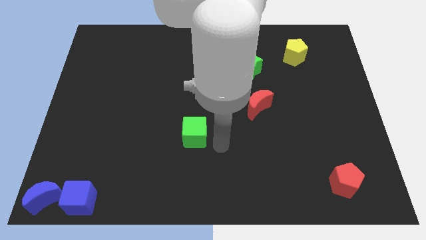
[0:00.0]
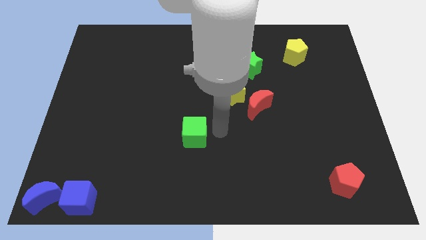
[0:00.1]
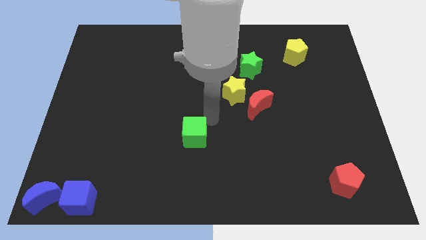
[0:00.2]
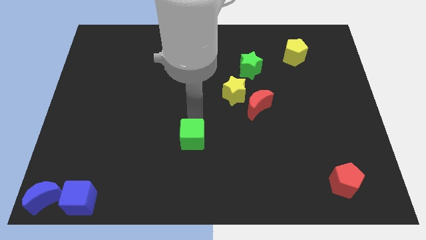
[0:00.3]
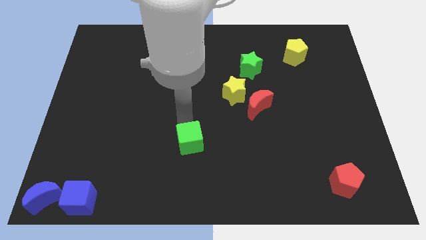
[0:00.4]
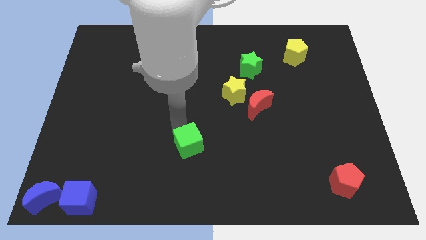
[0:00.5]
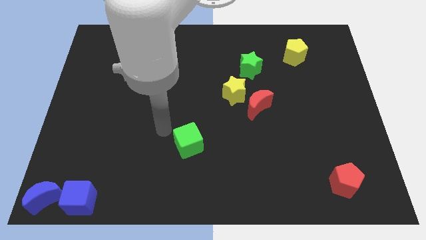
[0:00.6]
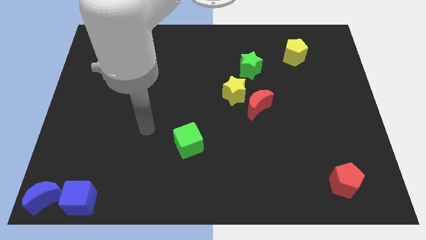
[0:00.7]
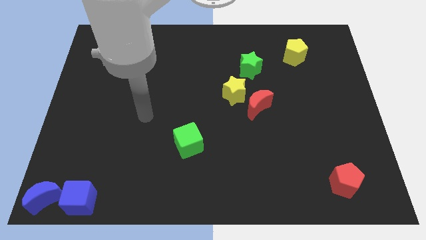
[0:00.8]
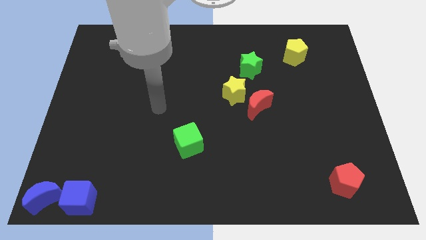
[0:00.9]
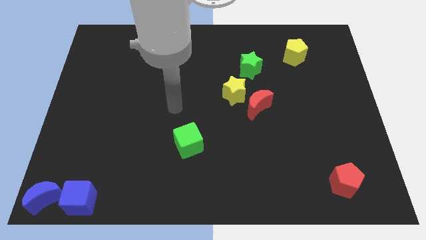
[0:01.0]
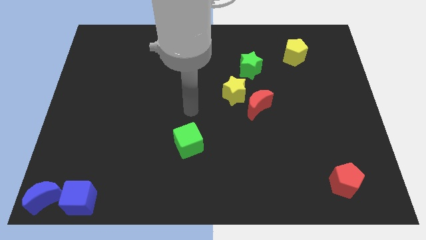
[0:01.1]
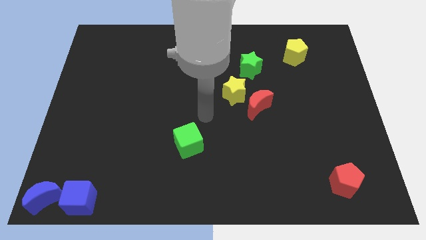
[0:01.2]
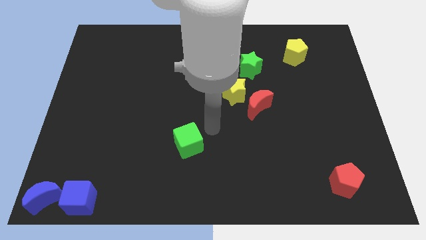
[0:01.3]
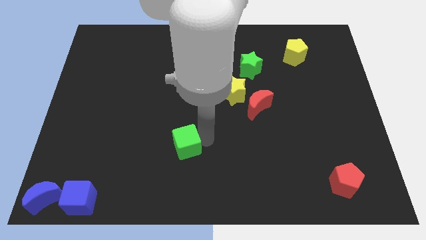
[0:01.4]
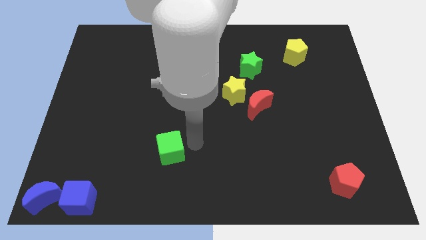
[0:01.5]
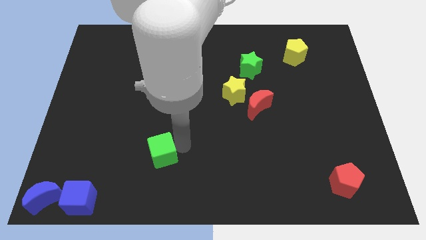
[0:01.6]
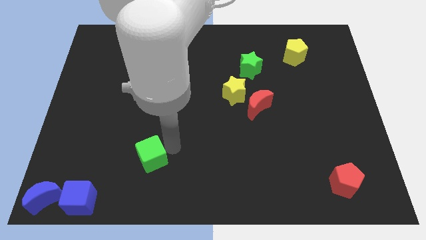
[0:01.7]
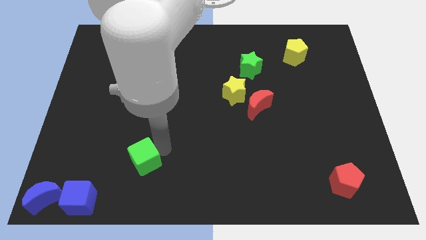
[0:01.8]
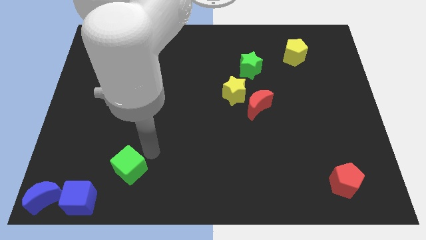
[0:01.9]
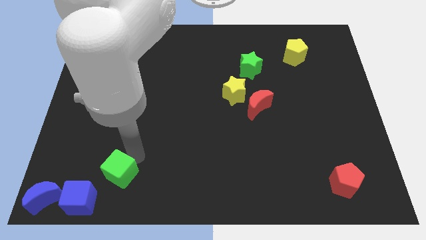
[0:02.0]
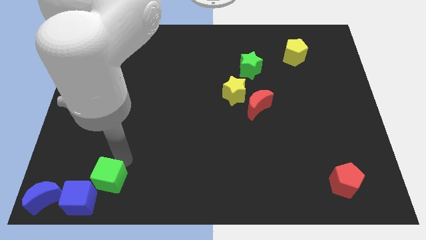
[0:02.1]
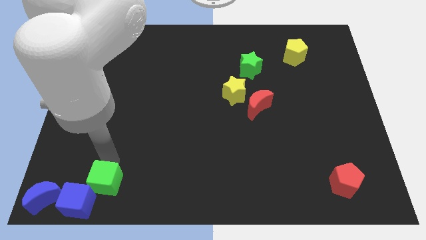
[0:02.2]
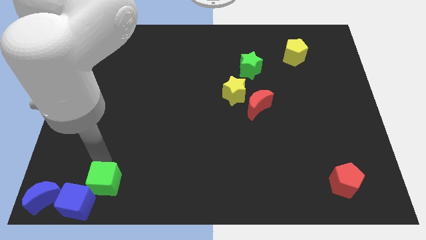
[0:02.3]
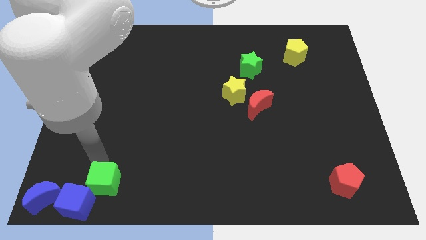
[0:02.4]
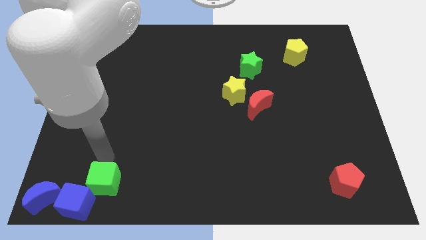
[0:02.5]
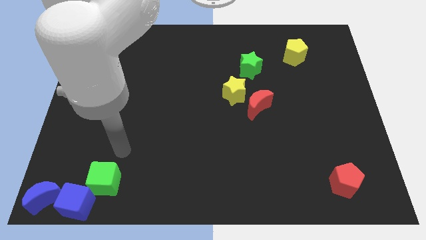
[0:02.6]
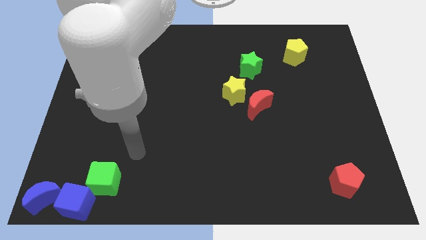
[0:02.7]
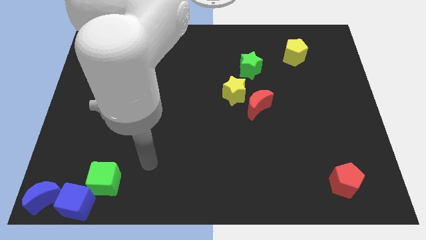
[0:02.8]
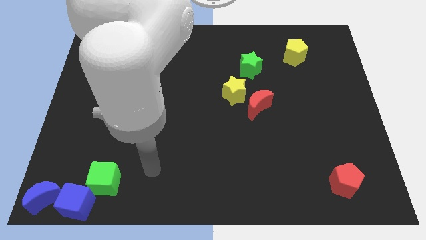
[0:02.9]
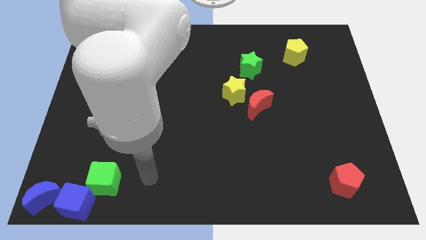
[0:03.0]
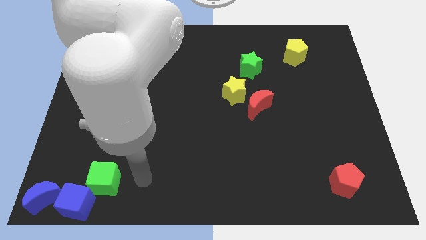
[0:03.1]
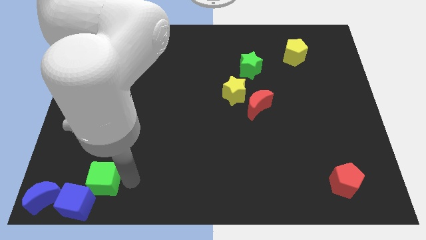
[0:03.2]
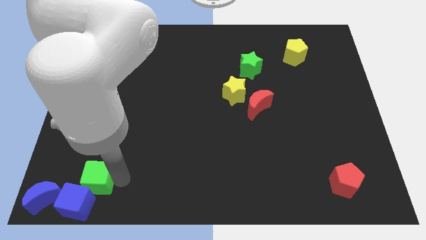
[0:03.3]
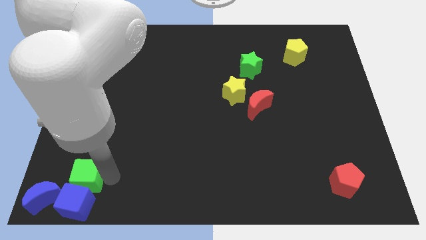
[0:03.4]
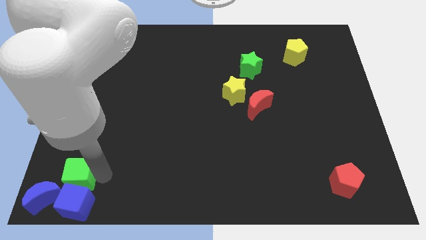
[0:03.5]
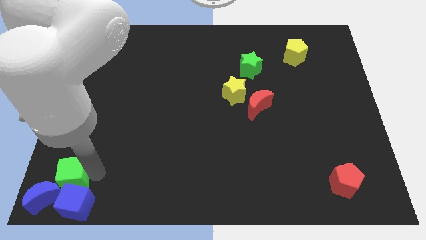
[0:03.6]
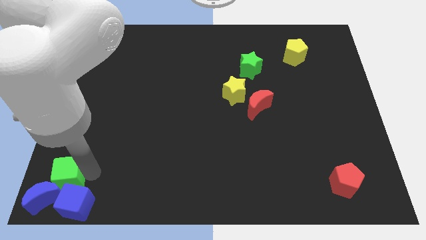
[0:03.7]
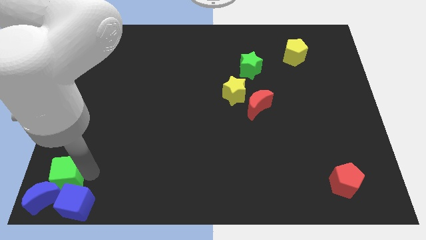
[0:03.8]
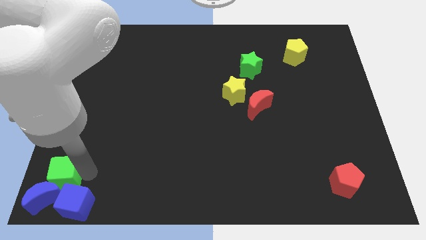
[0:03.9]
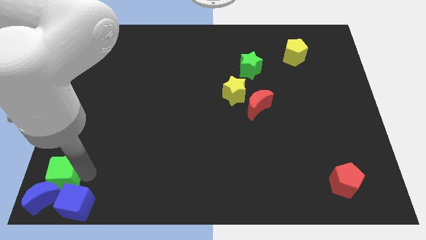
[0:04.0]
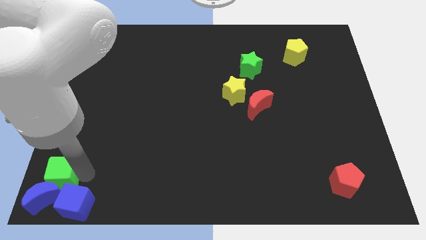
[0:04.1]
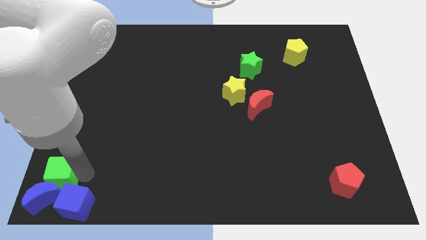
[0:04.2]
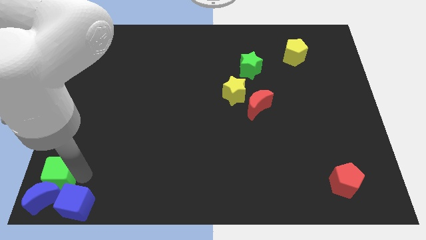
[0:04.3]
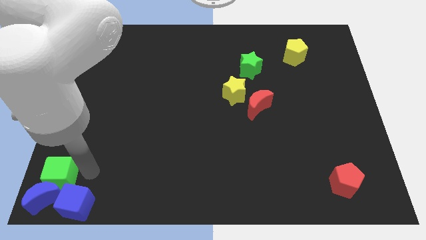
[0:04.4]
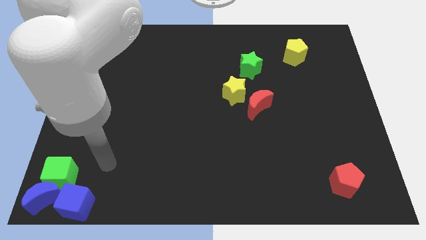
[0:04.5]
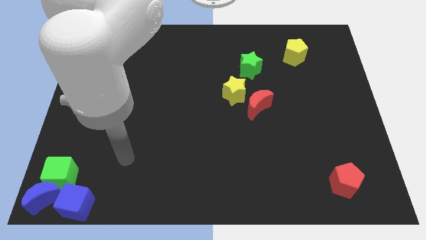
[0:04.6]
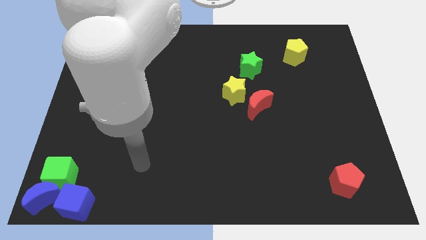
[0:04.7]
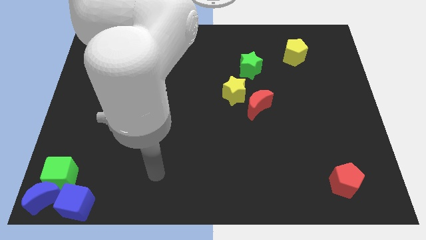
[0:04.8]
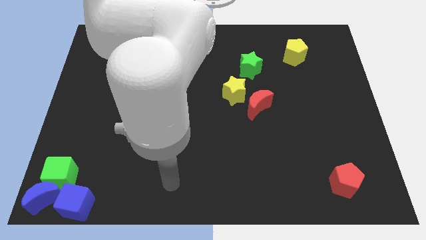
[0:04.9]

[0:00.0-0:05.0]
place the green cube above the blue crescent

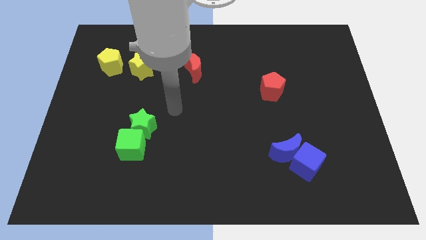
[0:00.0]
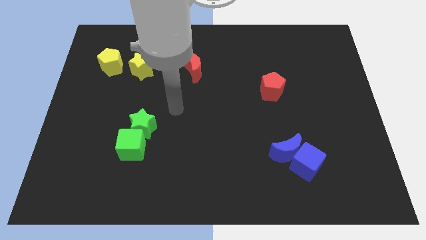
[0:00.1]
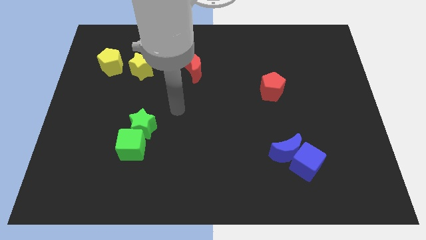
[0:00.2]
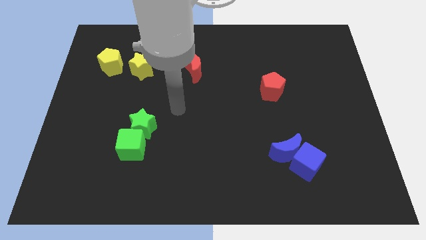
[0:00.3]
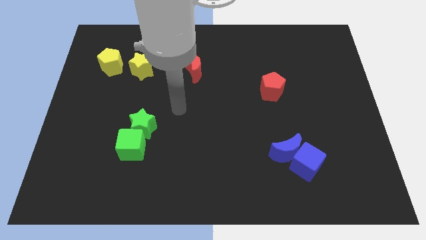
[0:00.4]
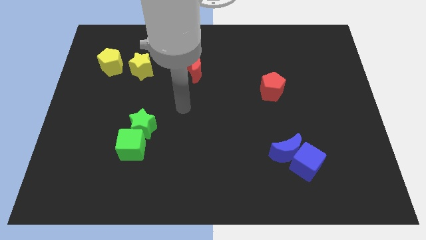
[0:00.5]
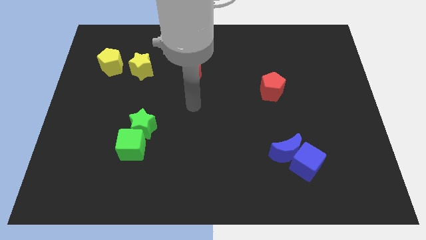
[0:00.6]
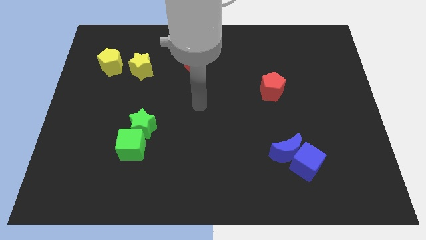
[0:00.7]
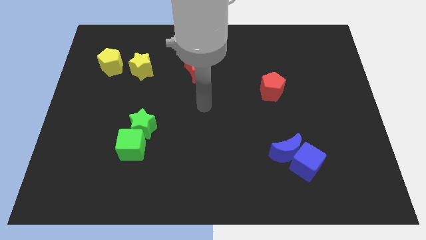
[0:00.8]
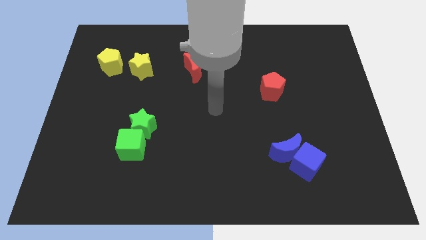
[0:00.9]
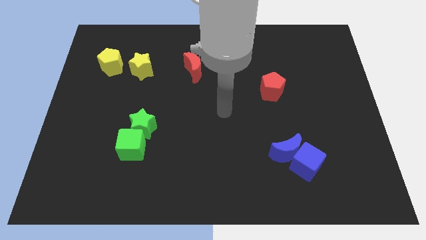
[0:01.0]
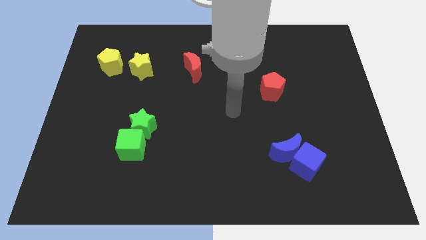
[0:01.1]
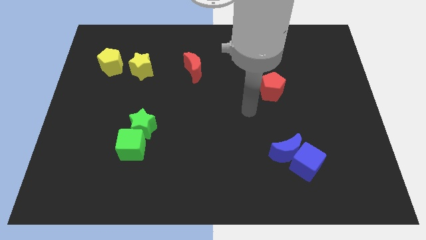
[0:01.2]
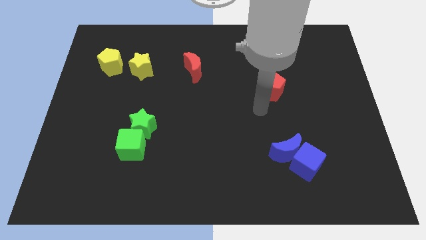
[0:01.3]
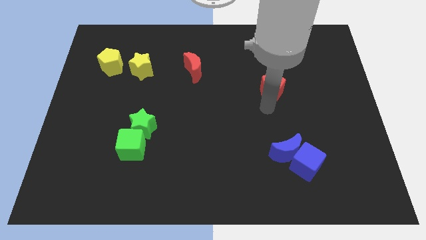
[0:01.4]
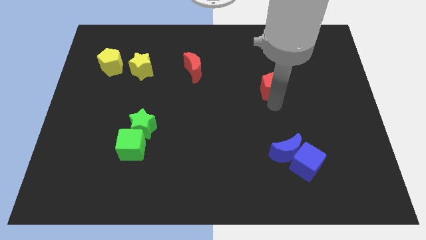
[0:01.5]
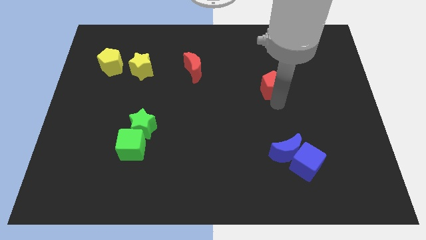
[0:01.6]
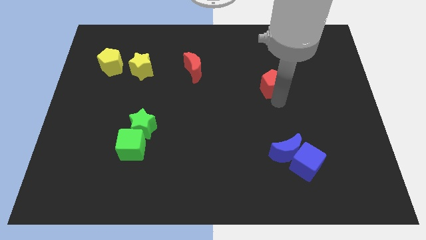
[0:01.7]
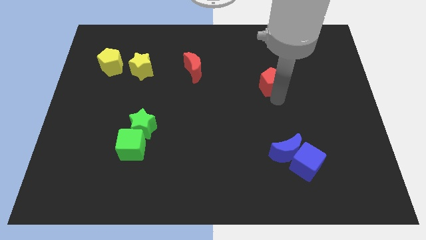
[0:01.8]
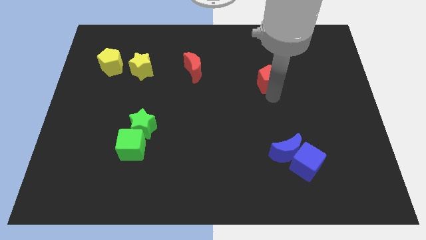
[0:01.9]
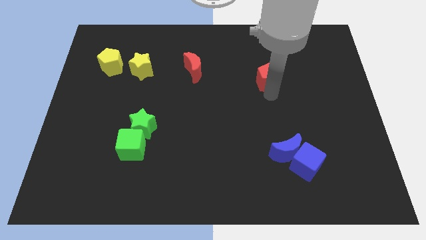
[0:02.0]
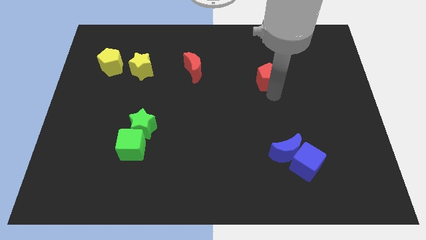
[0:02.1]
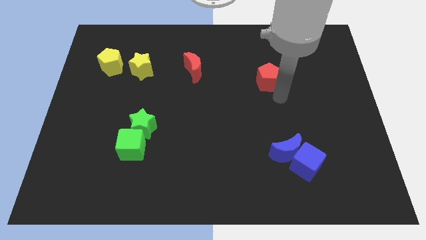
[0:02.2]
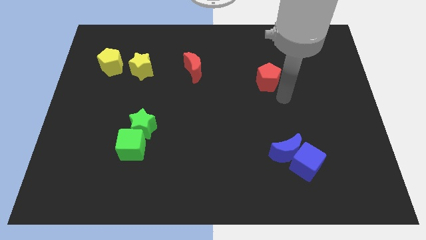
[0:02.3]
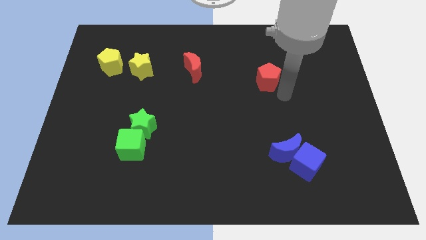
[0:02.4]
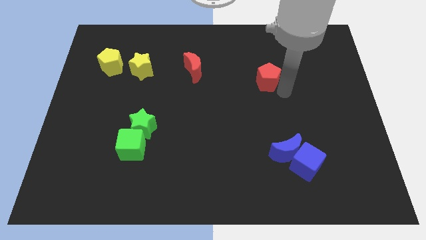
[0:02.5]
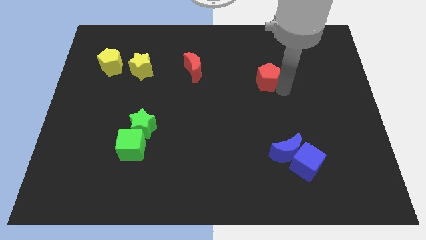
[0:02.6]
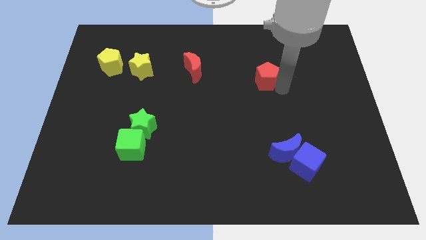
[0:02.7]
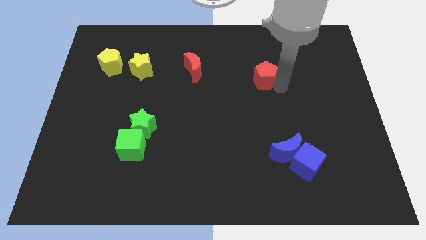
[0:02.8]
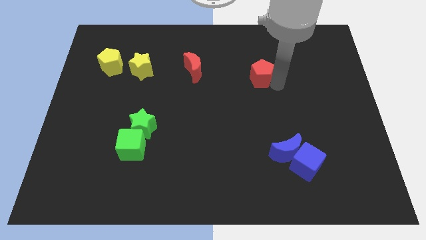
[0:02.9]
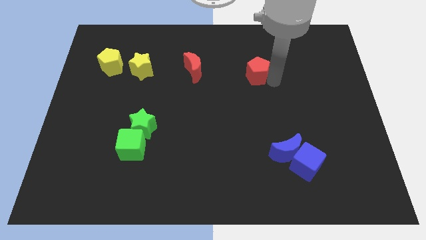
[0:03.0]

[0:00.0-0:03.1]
place the red pentagon right to the red crescent to form a horizontal line

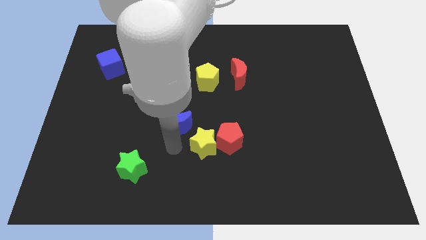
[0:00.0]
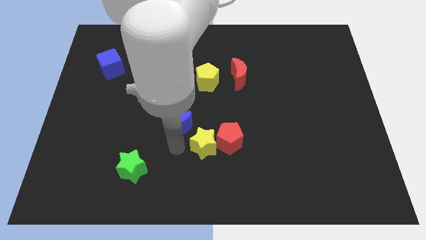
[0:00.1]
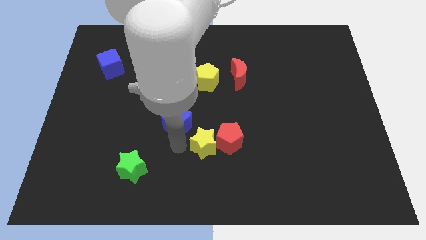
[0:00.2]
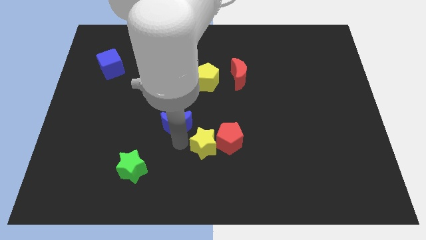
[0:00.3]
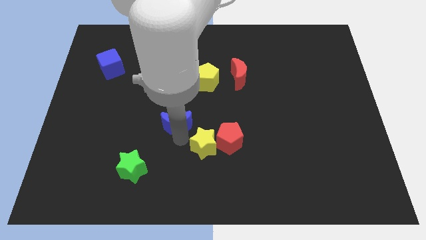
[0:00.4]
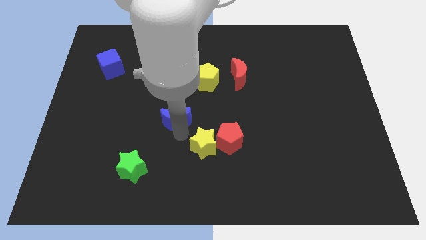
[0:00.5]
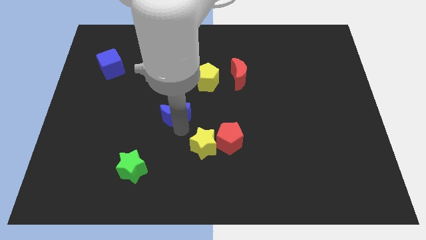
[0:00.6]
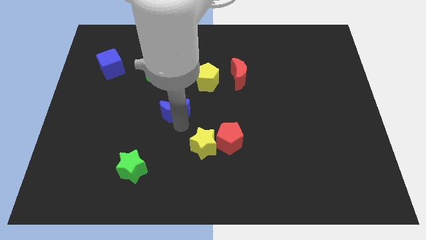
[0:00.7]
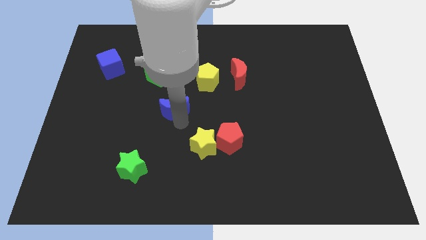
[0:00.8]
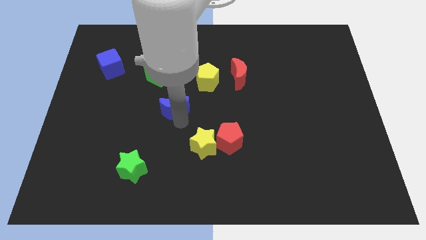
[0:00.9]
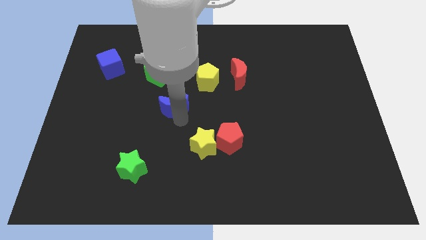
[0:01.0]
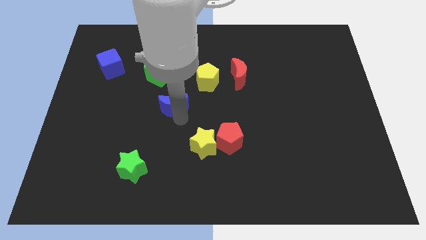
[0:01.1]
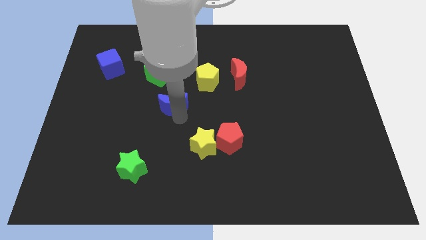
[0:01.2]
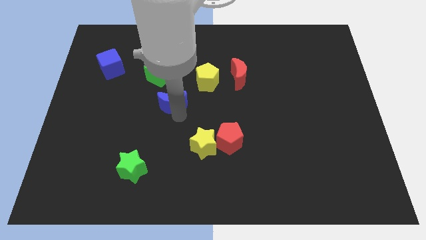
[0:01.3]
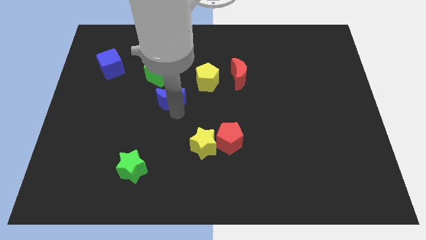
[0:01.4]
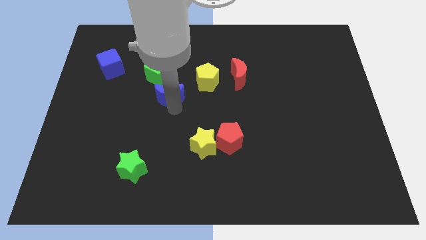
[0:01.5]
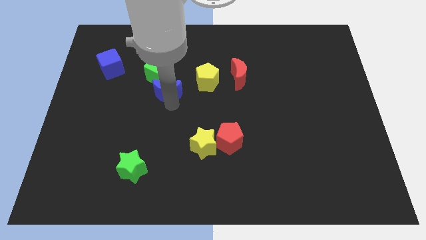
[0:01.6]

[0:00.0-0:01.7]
push the blue crescent into the green cube
